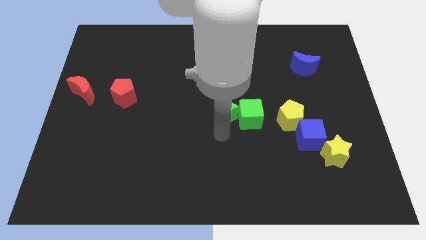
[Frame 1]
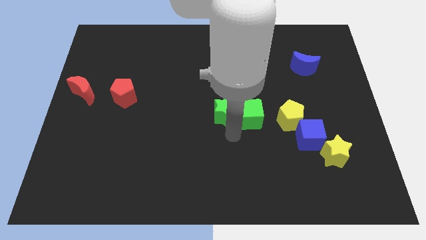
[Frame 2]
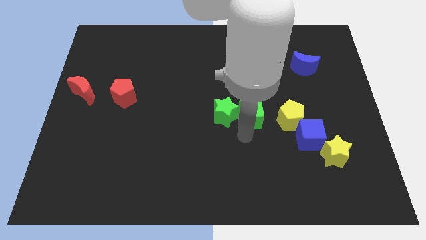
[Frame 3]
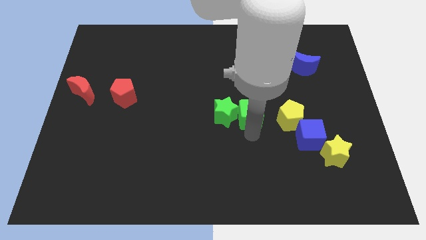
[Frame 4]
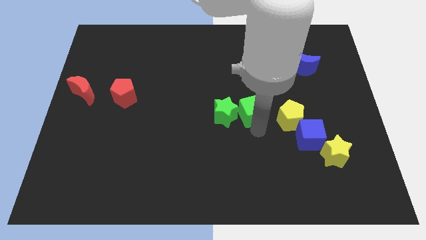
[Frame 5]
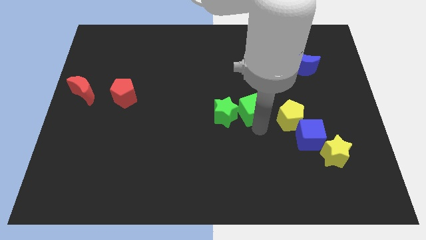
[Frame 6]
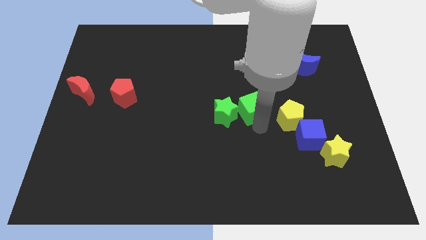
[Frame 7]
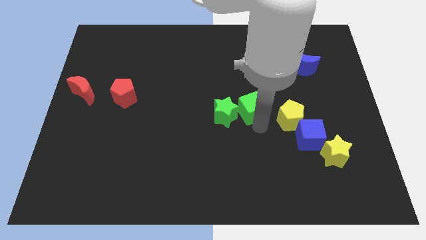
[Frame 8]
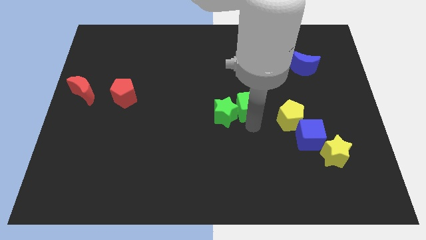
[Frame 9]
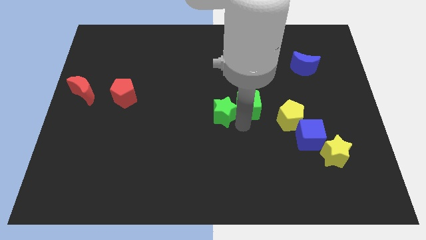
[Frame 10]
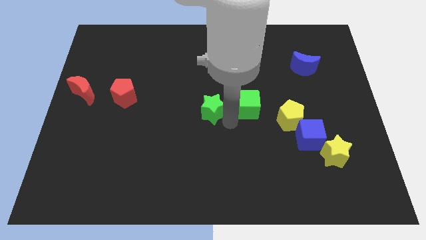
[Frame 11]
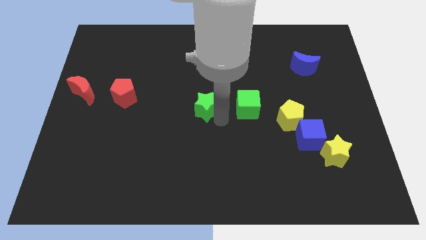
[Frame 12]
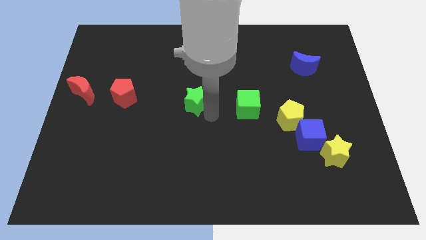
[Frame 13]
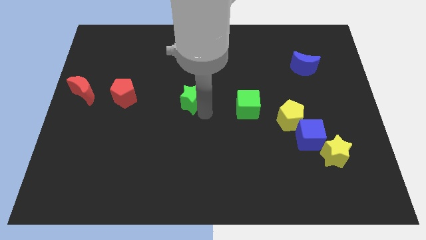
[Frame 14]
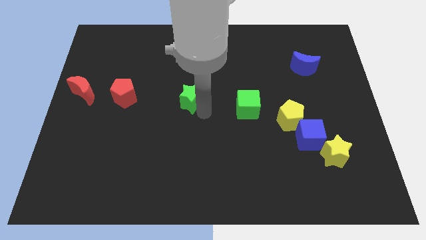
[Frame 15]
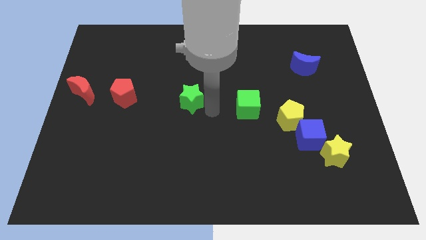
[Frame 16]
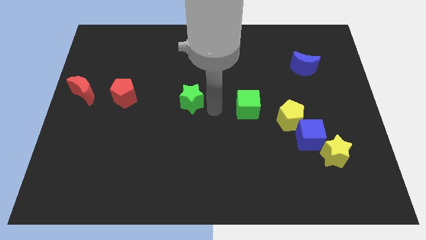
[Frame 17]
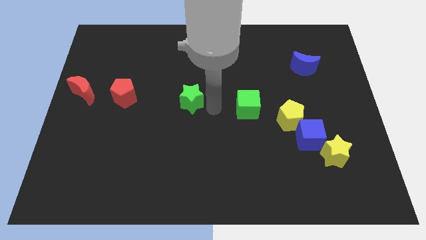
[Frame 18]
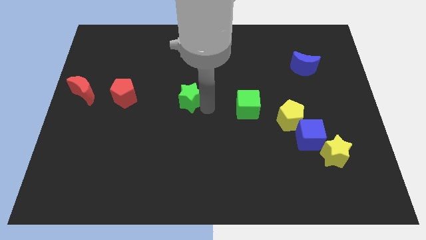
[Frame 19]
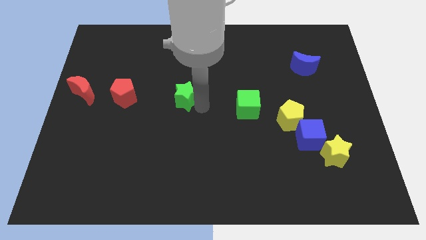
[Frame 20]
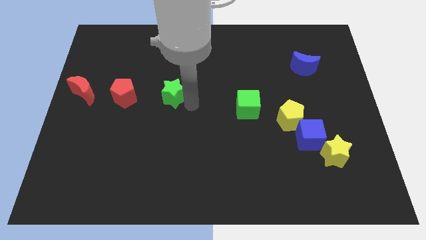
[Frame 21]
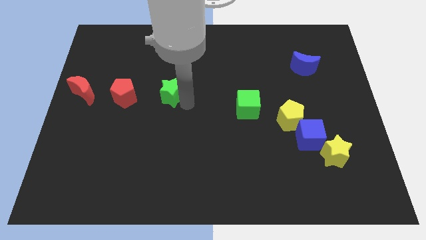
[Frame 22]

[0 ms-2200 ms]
separate green star away from the green cube

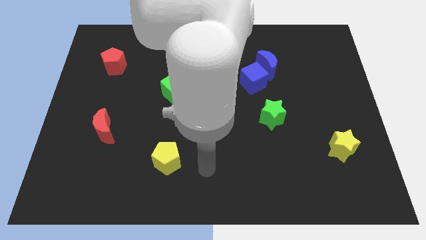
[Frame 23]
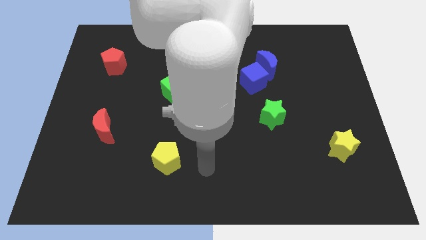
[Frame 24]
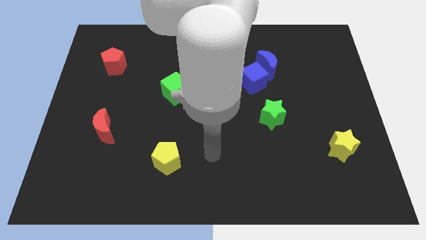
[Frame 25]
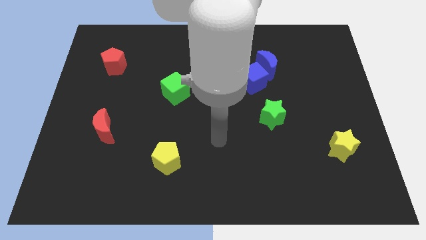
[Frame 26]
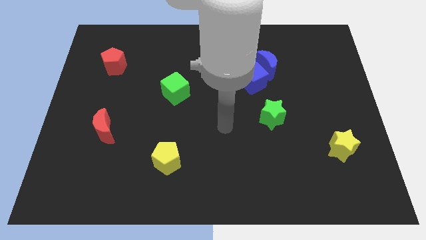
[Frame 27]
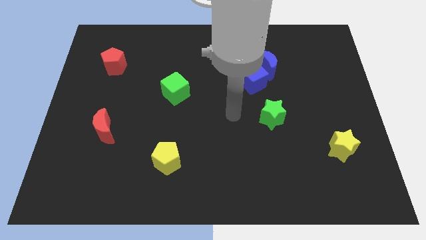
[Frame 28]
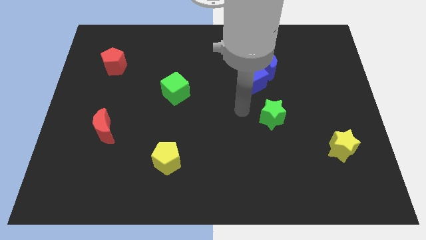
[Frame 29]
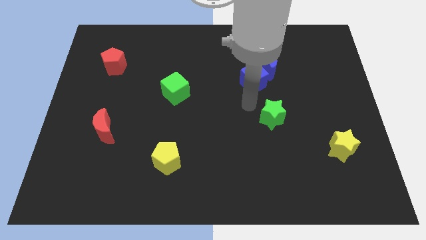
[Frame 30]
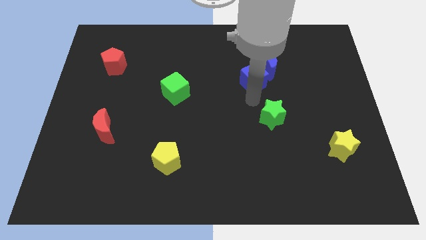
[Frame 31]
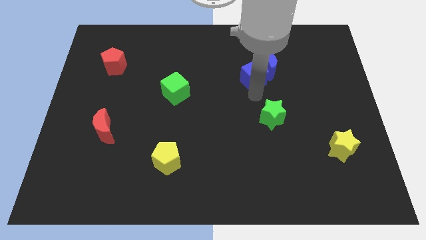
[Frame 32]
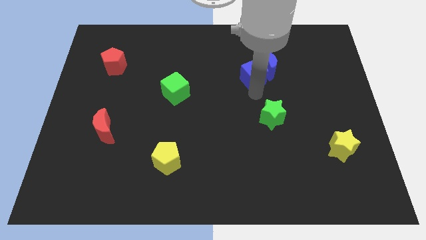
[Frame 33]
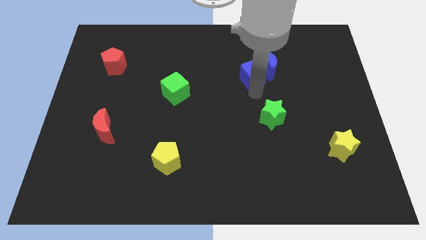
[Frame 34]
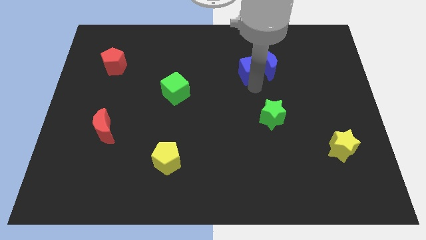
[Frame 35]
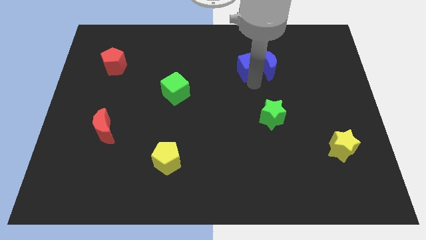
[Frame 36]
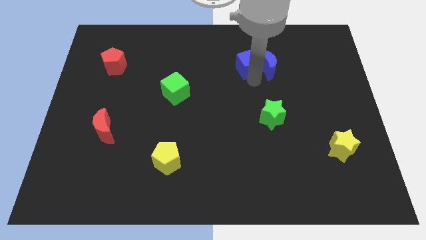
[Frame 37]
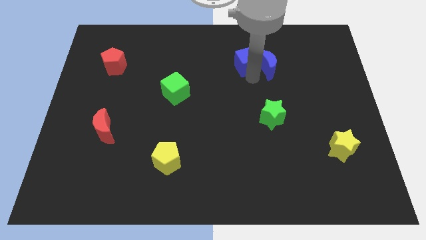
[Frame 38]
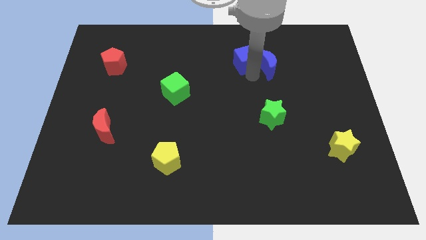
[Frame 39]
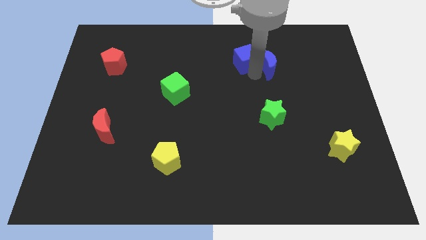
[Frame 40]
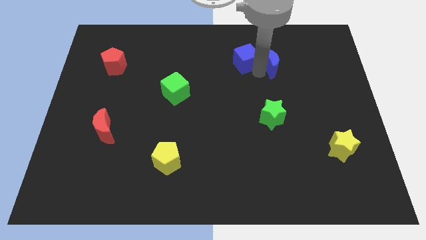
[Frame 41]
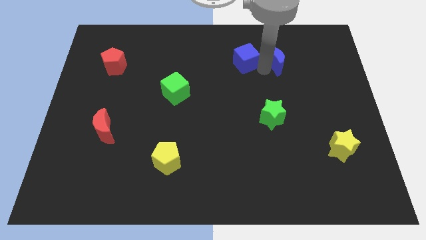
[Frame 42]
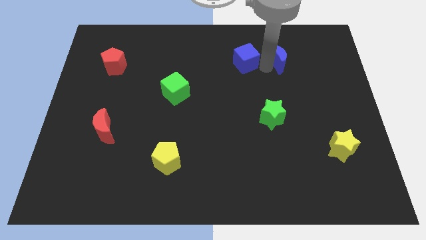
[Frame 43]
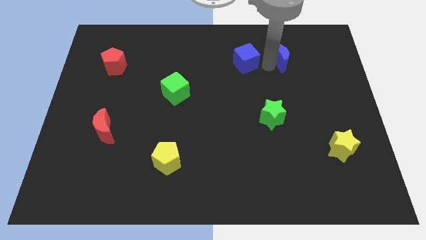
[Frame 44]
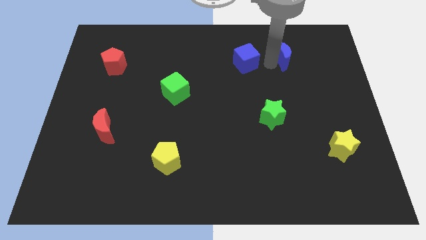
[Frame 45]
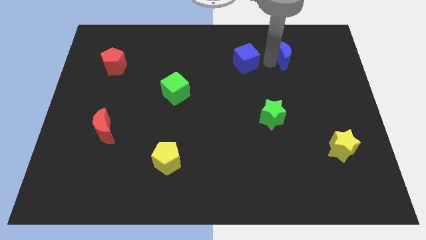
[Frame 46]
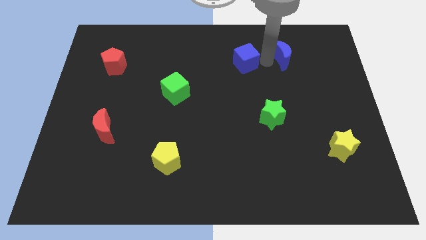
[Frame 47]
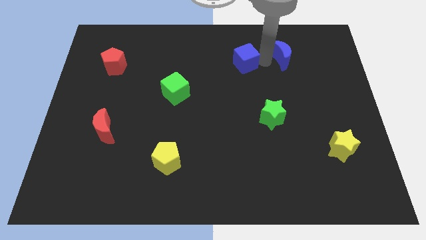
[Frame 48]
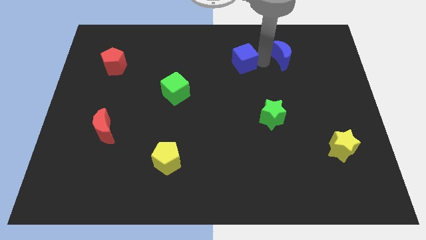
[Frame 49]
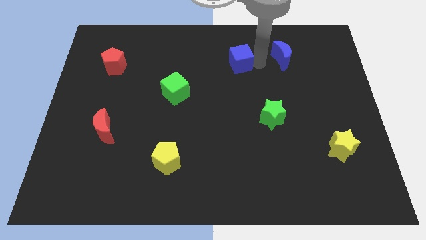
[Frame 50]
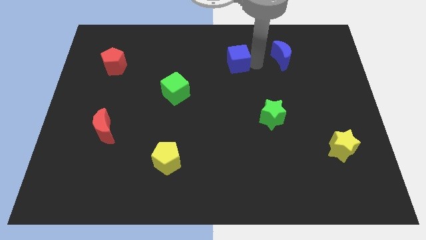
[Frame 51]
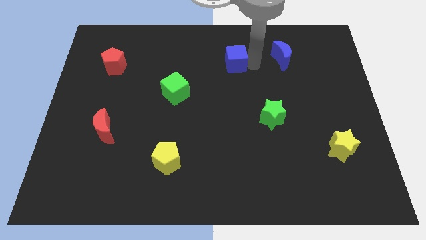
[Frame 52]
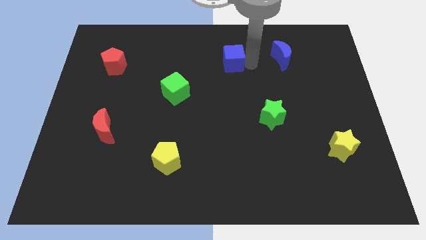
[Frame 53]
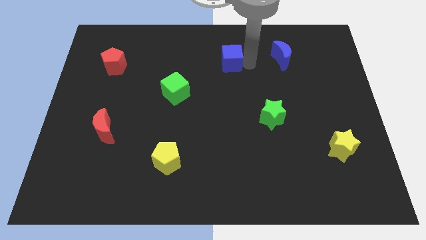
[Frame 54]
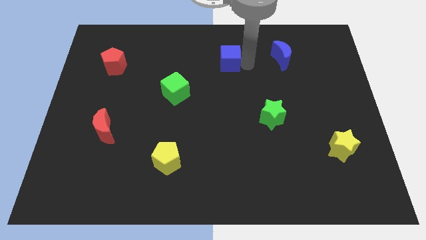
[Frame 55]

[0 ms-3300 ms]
separate the blue cube from the blue crescent

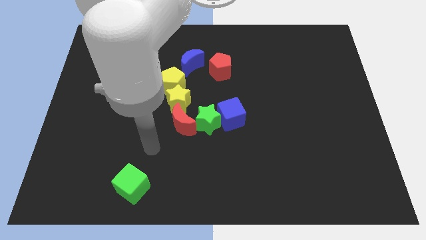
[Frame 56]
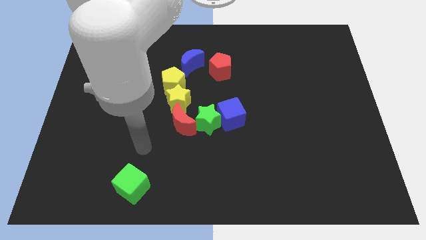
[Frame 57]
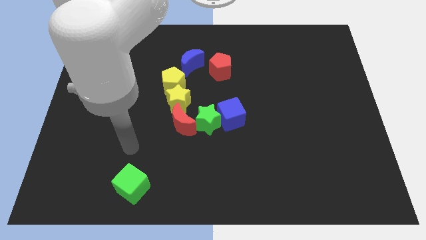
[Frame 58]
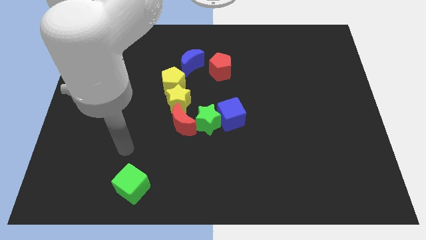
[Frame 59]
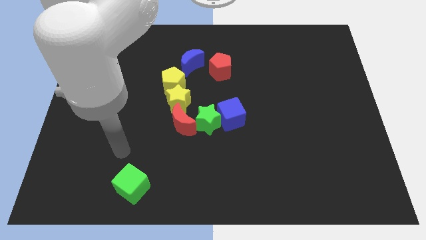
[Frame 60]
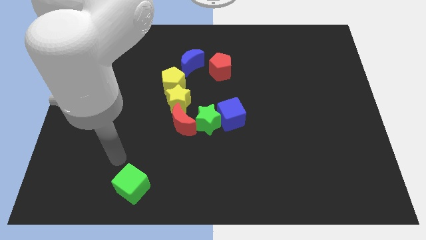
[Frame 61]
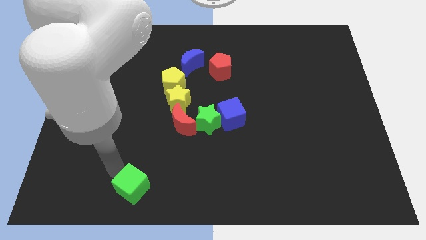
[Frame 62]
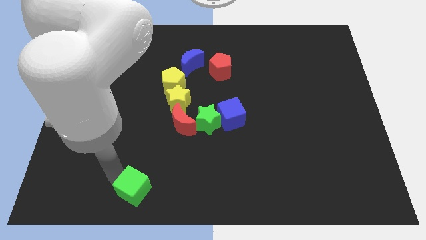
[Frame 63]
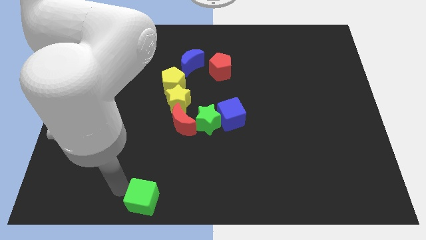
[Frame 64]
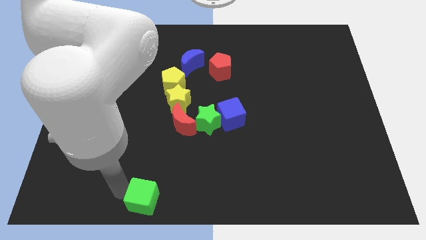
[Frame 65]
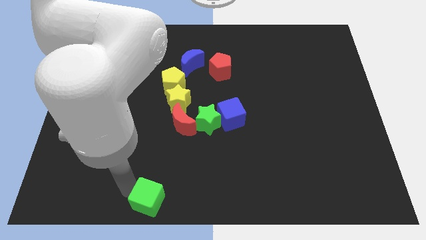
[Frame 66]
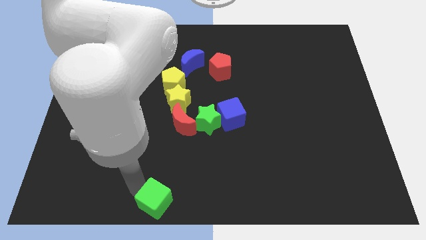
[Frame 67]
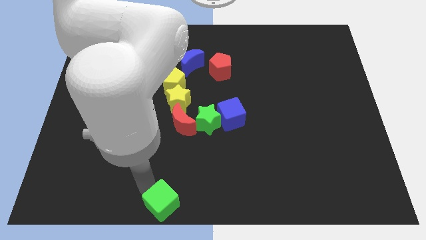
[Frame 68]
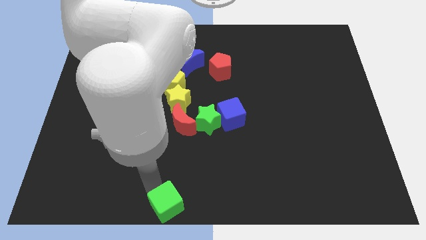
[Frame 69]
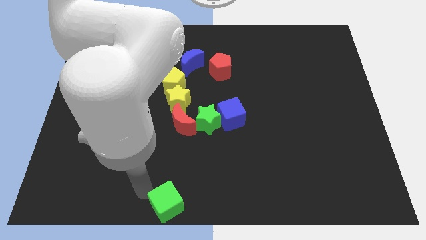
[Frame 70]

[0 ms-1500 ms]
push the green cube towards the bottom center

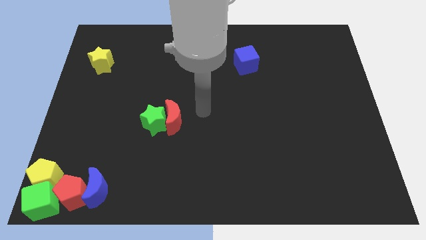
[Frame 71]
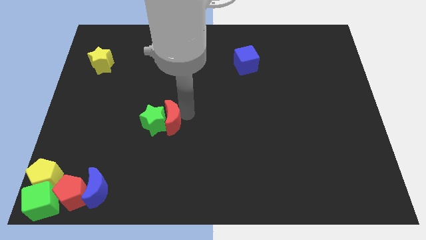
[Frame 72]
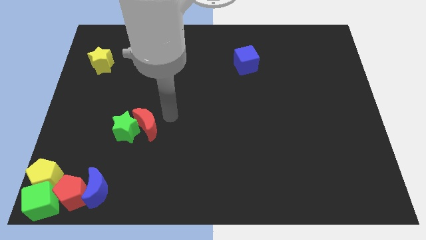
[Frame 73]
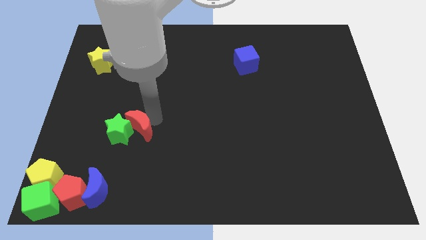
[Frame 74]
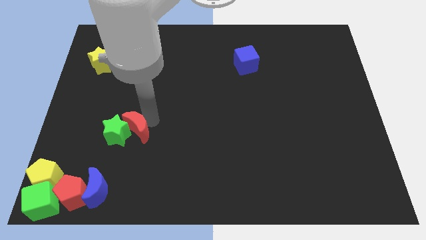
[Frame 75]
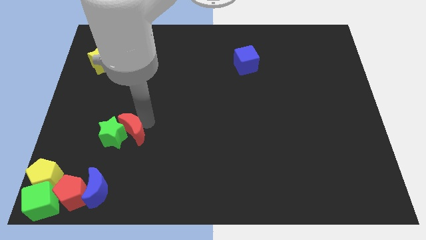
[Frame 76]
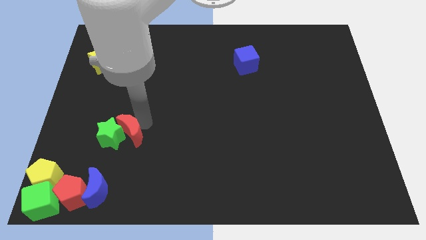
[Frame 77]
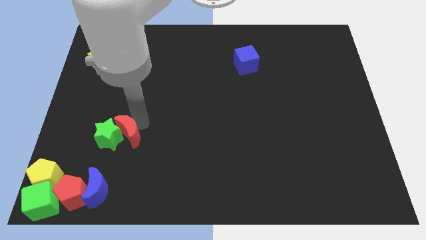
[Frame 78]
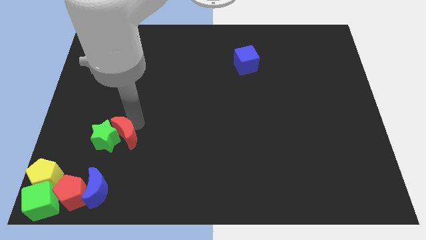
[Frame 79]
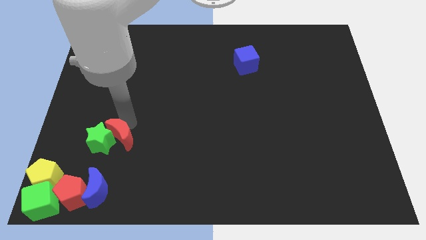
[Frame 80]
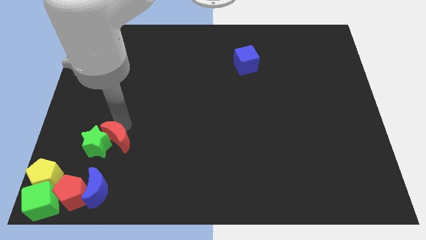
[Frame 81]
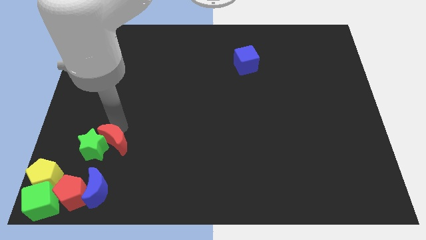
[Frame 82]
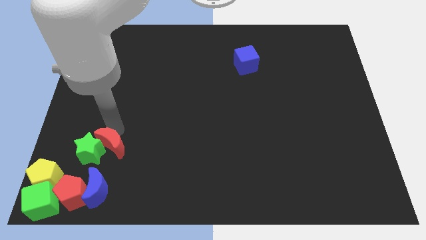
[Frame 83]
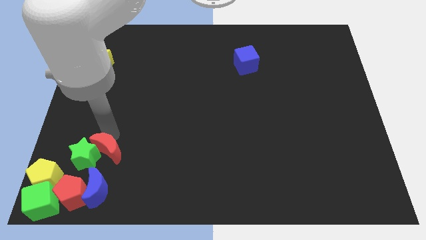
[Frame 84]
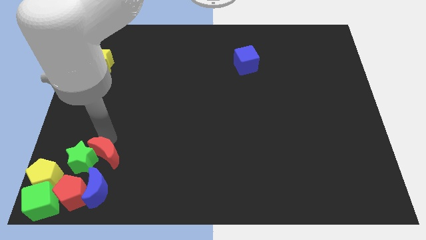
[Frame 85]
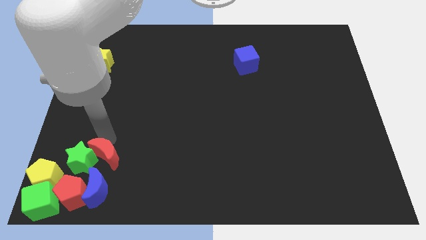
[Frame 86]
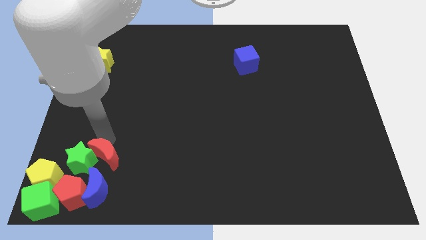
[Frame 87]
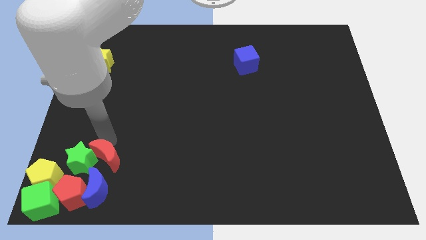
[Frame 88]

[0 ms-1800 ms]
push green star above red pentagon with the help of red crescent

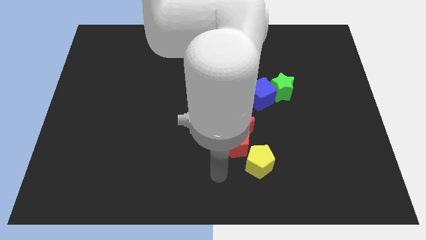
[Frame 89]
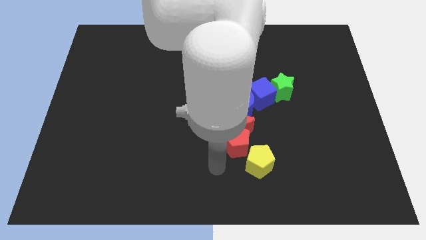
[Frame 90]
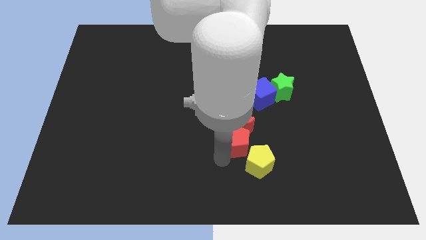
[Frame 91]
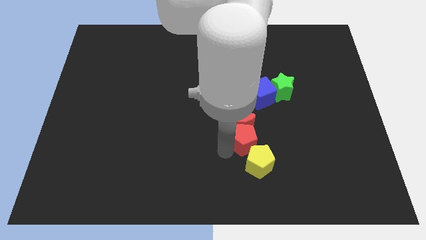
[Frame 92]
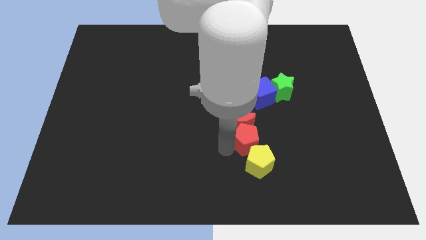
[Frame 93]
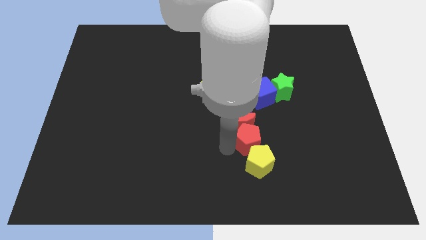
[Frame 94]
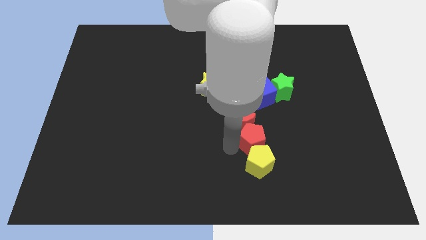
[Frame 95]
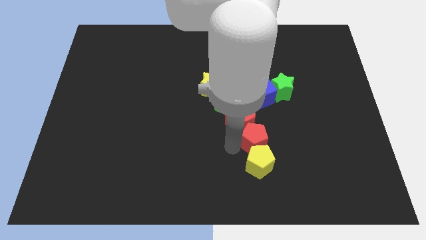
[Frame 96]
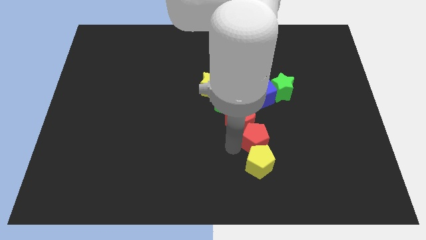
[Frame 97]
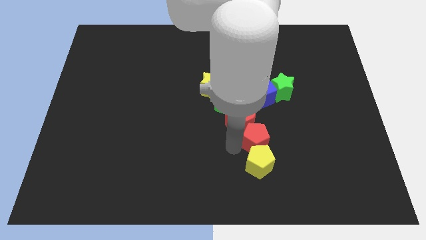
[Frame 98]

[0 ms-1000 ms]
place the red pentagon above the yellow pentagon
